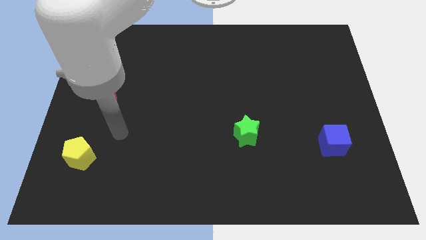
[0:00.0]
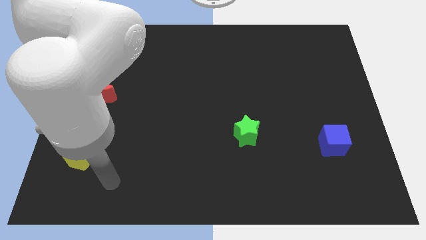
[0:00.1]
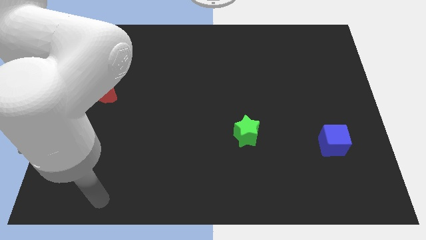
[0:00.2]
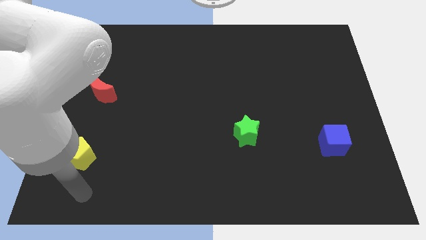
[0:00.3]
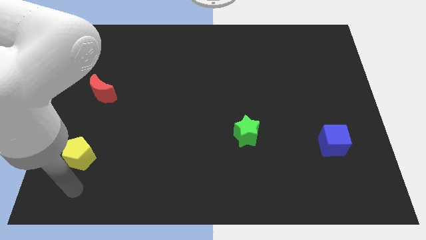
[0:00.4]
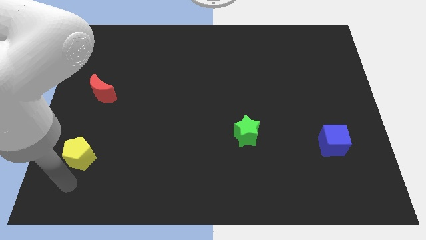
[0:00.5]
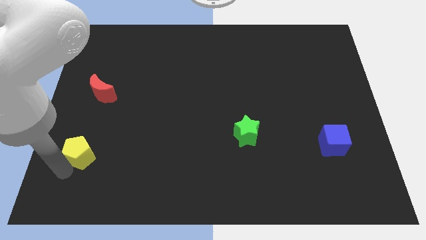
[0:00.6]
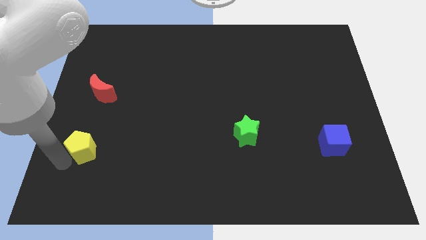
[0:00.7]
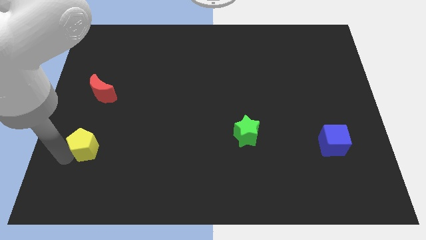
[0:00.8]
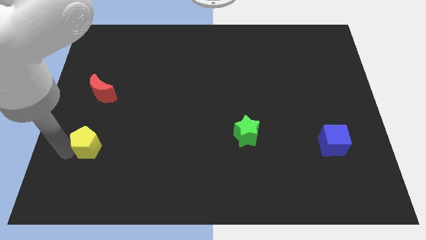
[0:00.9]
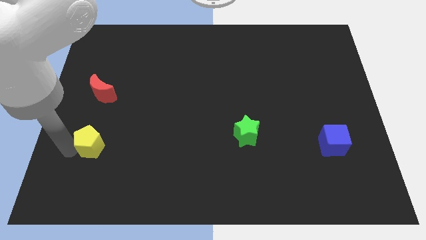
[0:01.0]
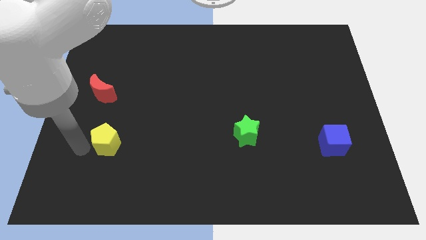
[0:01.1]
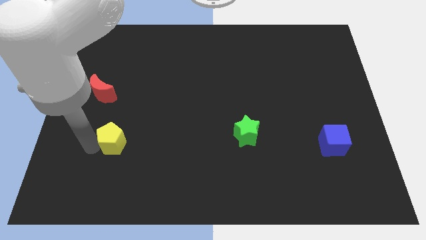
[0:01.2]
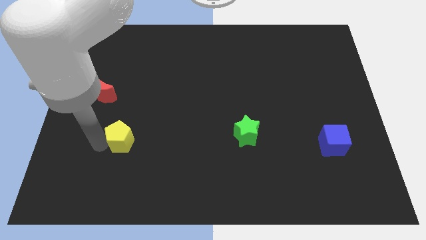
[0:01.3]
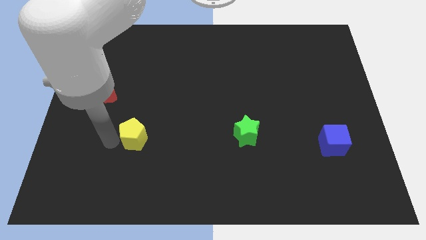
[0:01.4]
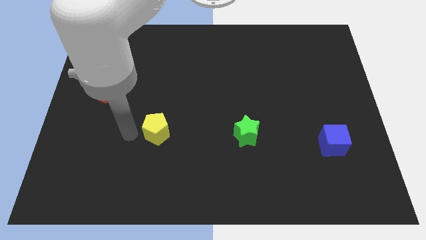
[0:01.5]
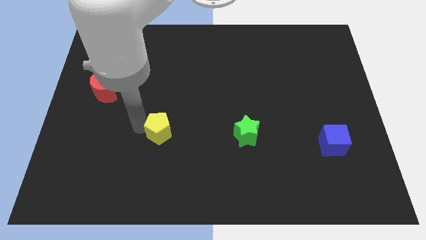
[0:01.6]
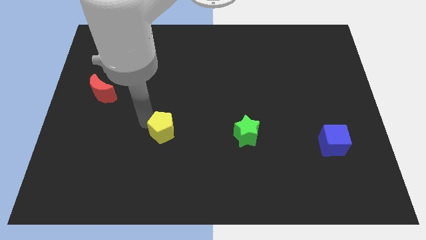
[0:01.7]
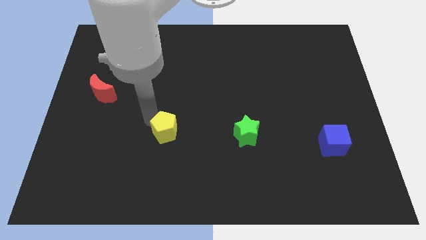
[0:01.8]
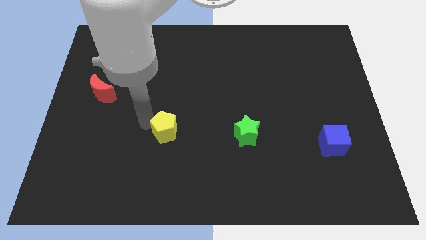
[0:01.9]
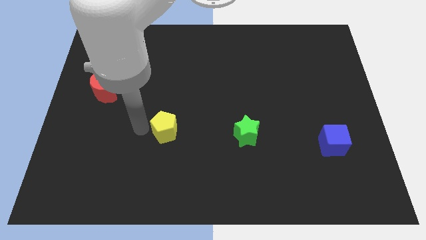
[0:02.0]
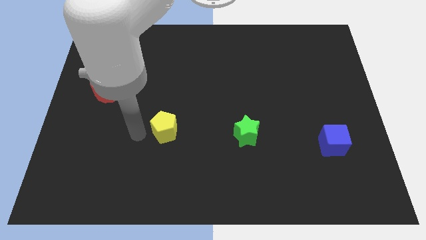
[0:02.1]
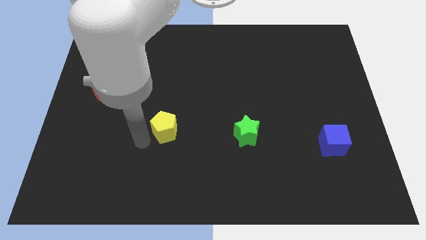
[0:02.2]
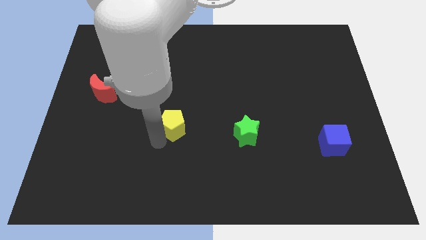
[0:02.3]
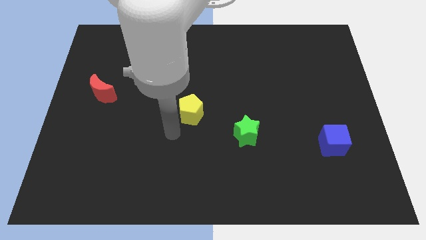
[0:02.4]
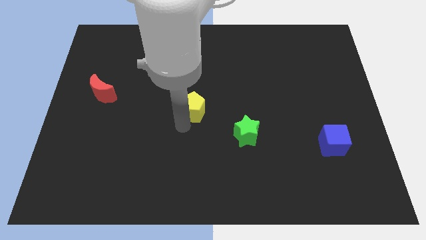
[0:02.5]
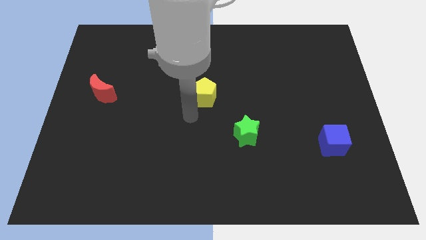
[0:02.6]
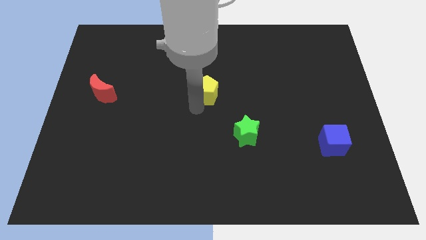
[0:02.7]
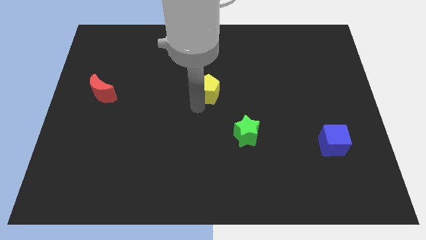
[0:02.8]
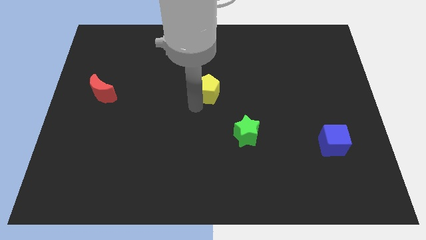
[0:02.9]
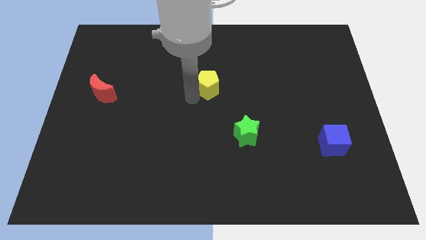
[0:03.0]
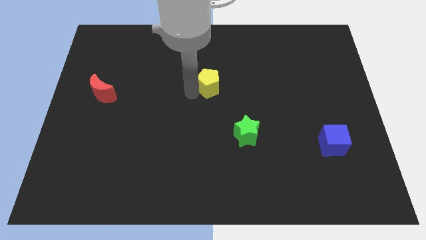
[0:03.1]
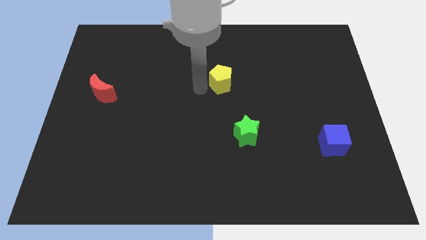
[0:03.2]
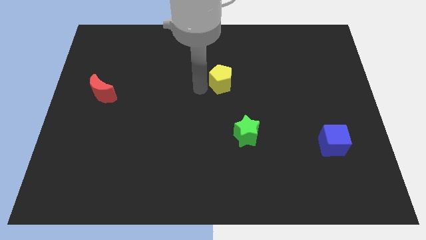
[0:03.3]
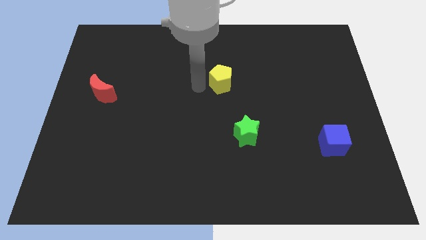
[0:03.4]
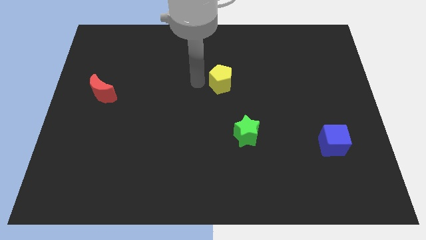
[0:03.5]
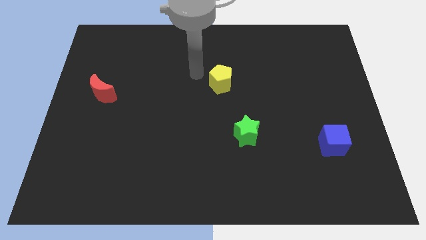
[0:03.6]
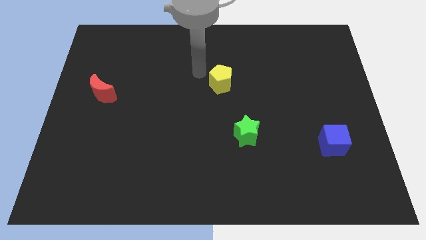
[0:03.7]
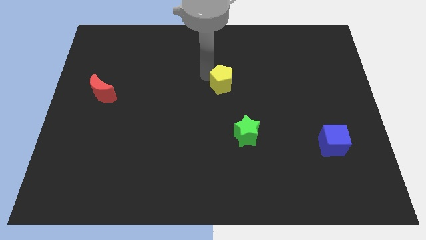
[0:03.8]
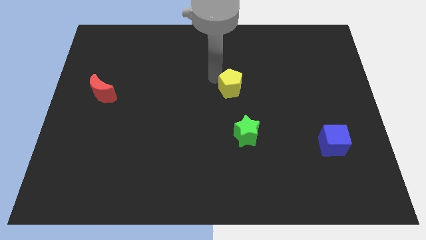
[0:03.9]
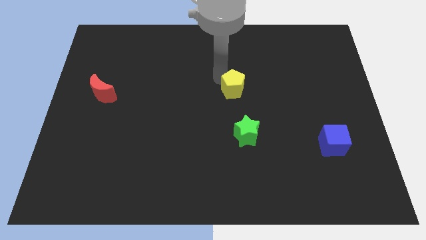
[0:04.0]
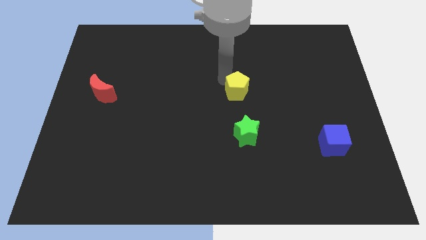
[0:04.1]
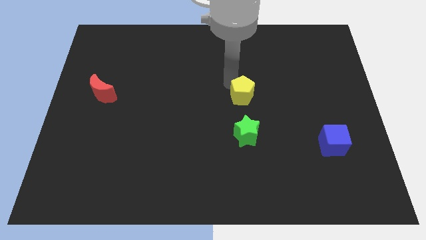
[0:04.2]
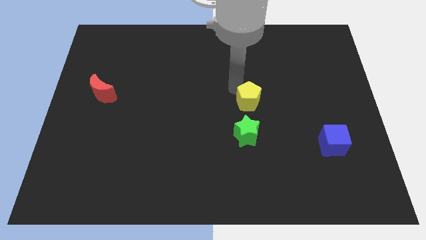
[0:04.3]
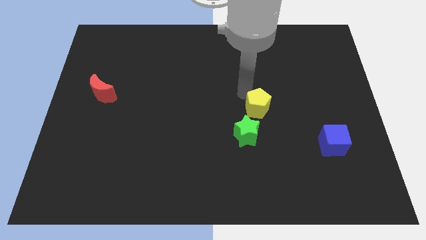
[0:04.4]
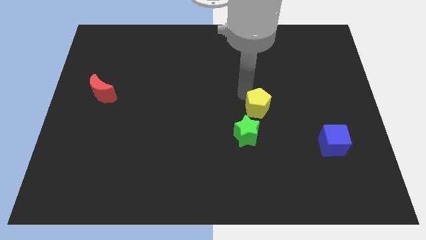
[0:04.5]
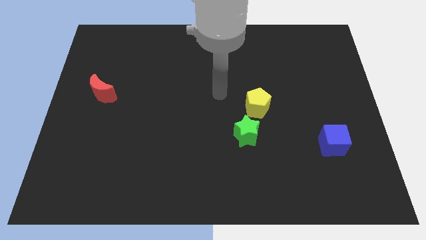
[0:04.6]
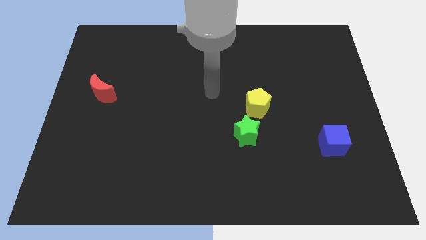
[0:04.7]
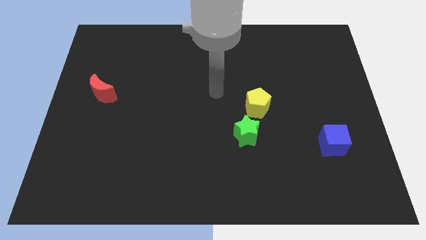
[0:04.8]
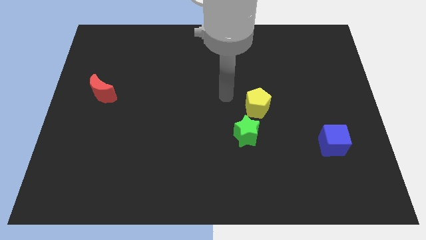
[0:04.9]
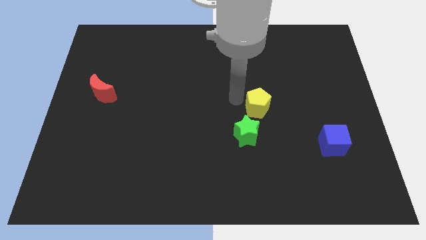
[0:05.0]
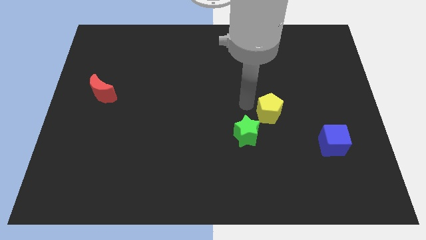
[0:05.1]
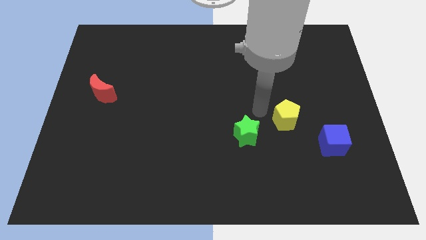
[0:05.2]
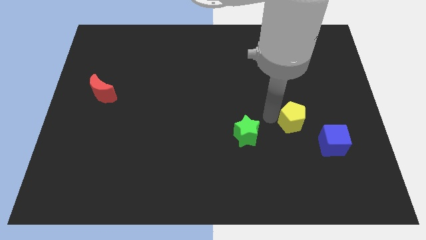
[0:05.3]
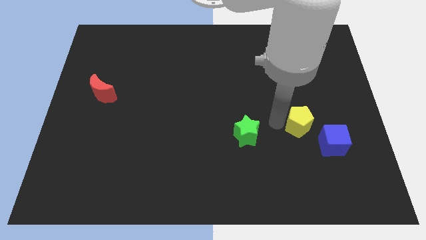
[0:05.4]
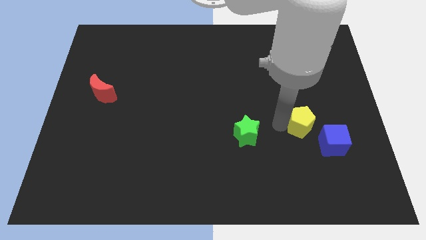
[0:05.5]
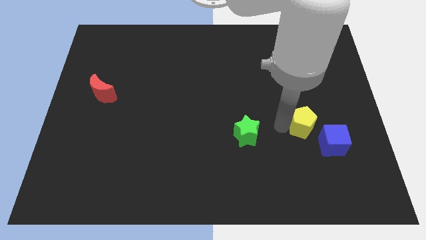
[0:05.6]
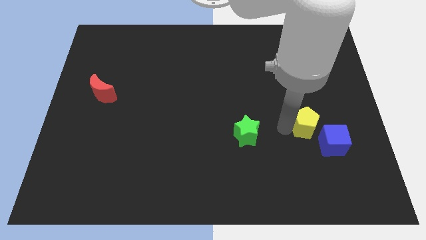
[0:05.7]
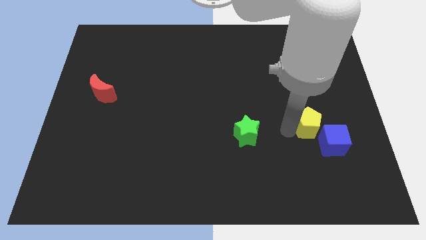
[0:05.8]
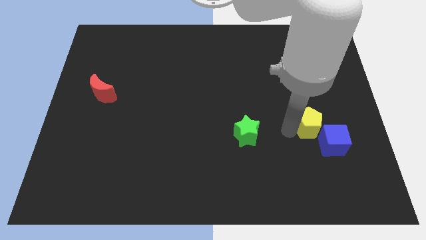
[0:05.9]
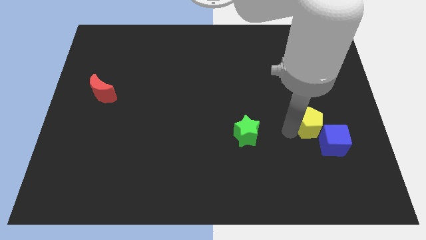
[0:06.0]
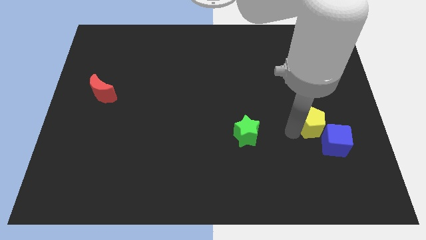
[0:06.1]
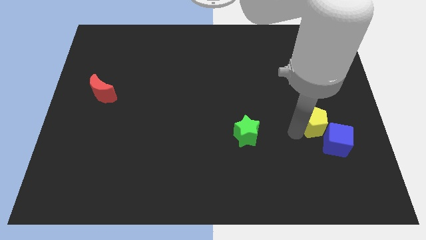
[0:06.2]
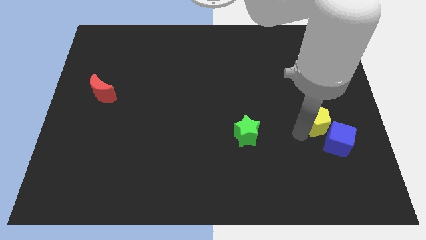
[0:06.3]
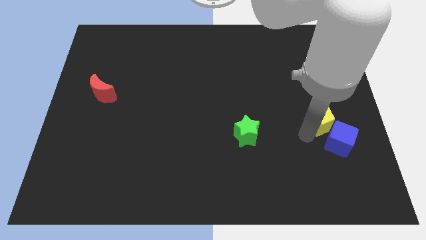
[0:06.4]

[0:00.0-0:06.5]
slide the yellow block towards the blue block

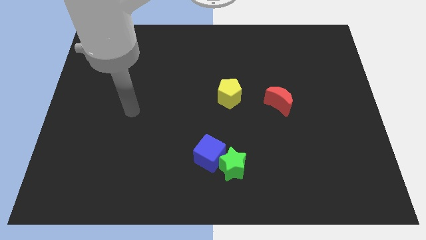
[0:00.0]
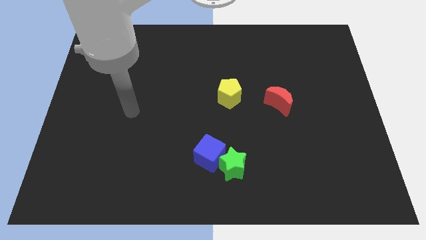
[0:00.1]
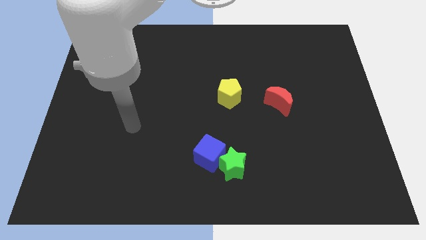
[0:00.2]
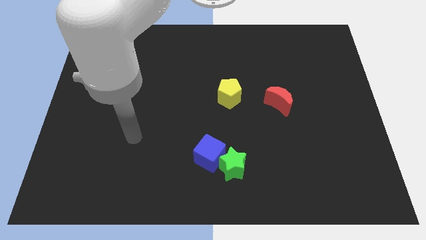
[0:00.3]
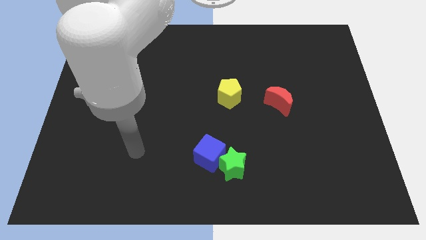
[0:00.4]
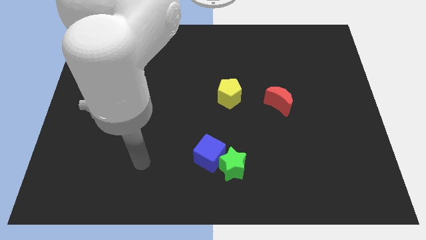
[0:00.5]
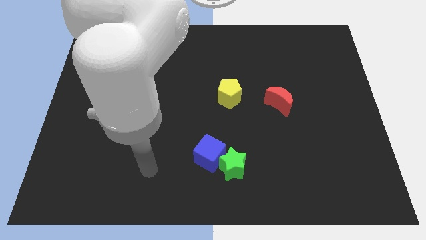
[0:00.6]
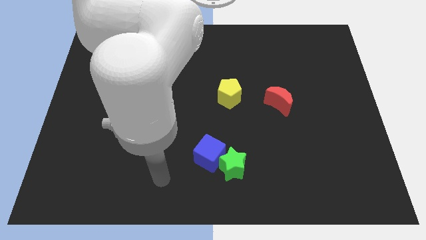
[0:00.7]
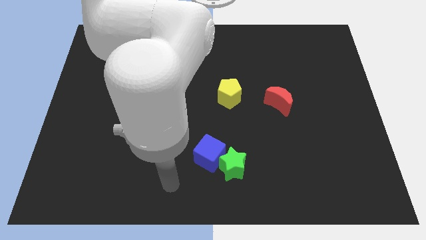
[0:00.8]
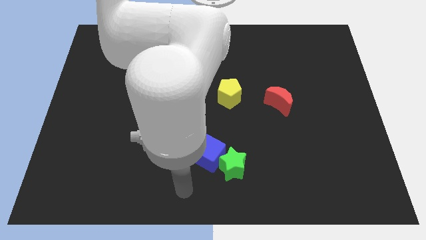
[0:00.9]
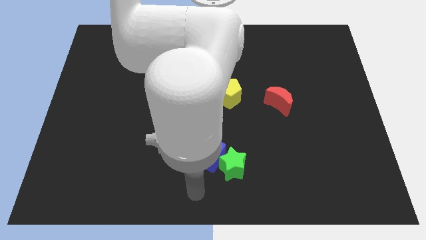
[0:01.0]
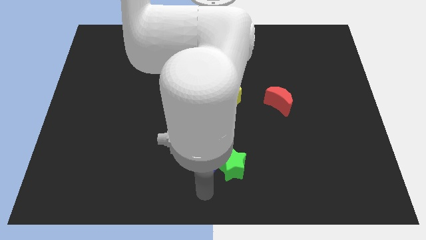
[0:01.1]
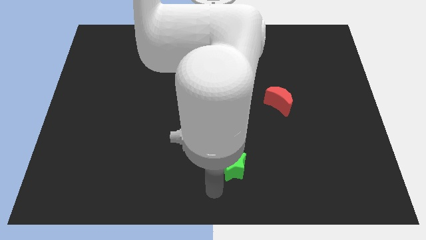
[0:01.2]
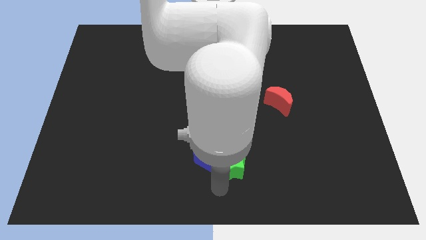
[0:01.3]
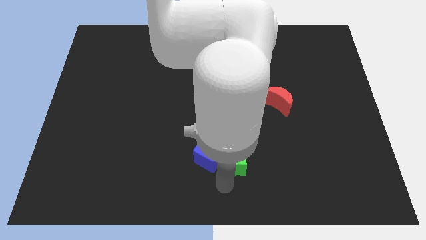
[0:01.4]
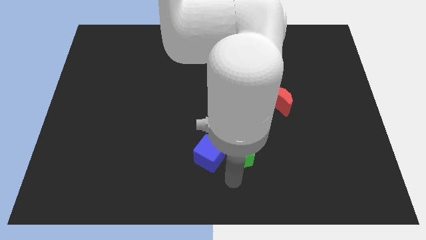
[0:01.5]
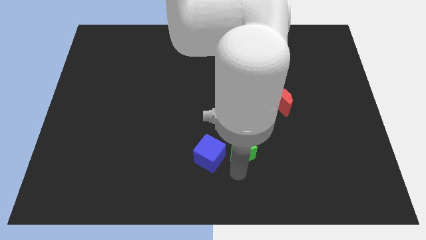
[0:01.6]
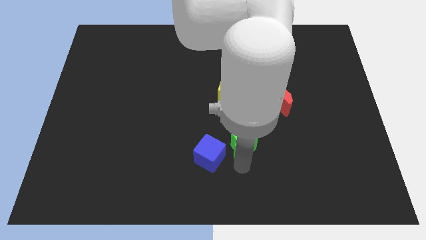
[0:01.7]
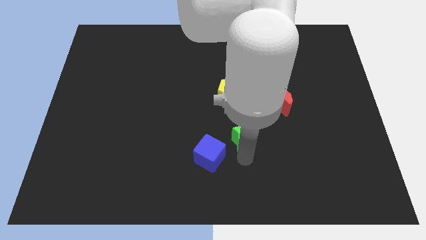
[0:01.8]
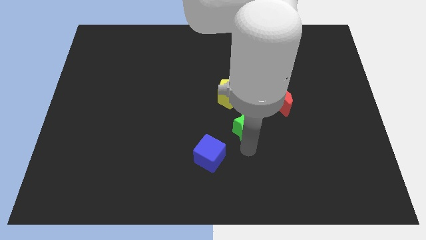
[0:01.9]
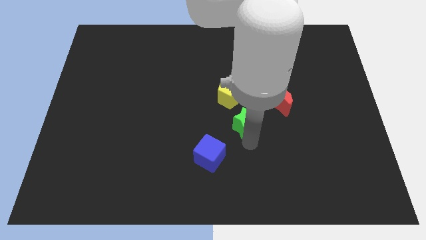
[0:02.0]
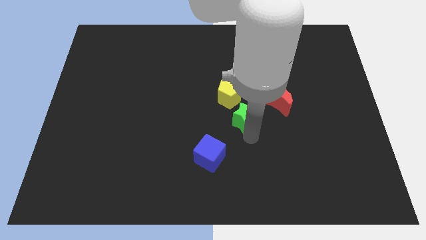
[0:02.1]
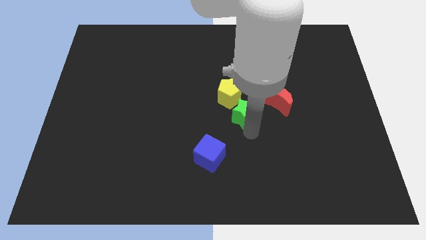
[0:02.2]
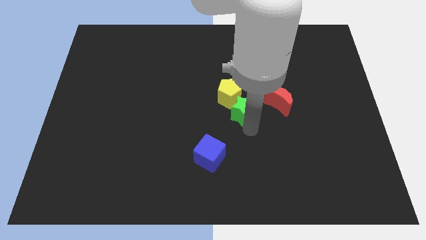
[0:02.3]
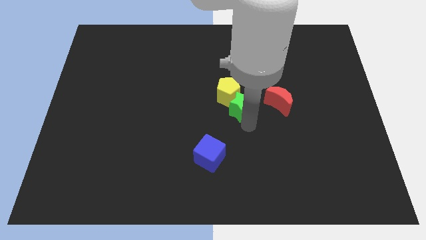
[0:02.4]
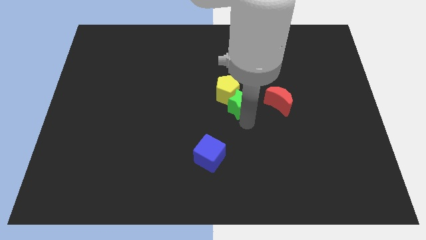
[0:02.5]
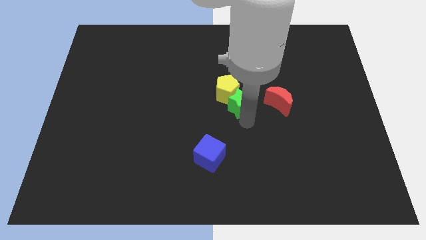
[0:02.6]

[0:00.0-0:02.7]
put the star close to the yellow pentagon
